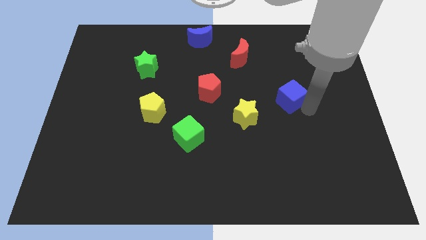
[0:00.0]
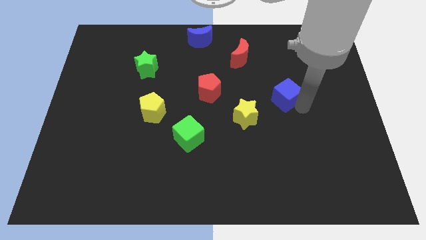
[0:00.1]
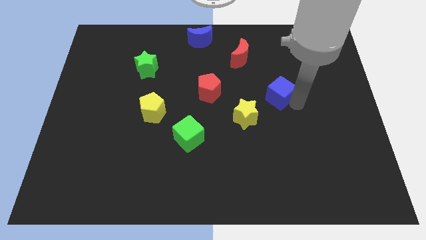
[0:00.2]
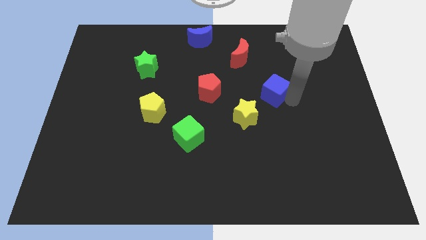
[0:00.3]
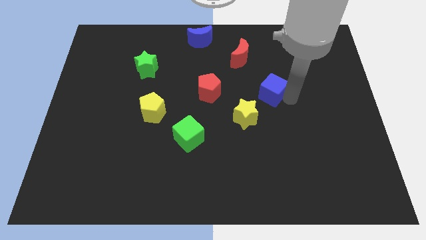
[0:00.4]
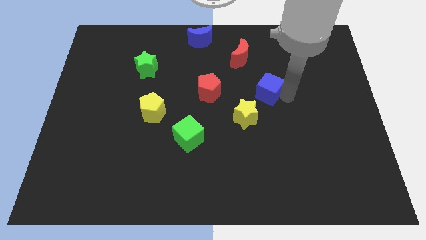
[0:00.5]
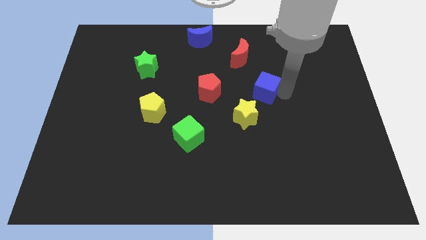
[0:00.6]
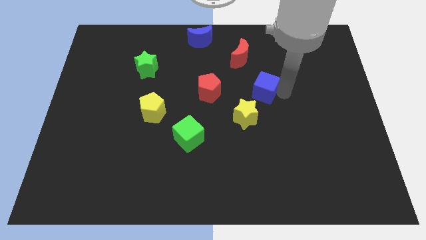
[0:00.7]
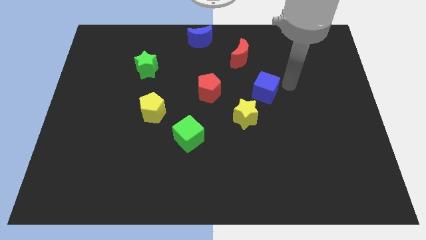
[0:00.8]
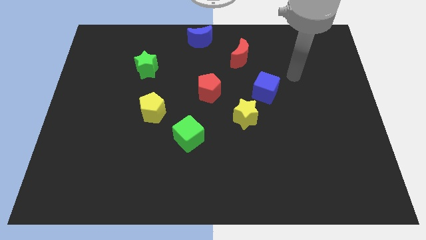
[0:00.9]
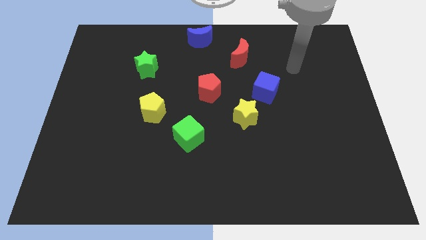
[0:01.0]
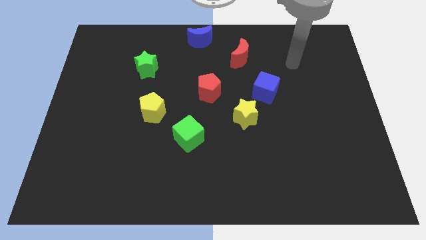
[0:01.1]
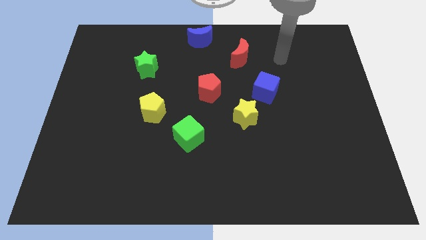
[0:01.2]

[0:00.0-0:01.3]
place the blue cube close to the yellow star

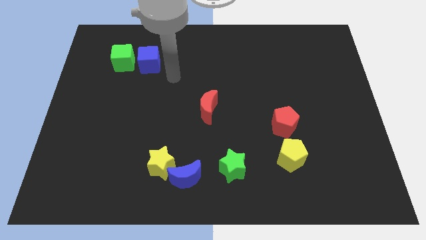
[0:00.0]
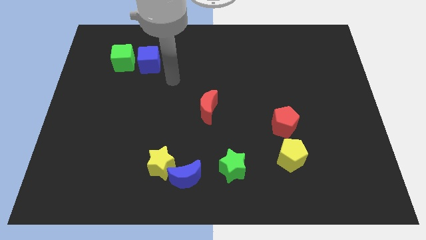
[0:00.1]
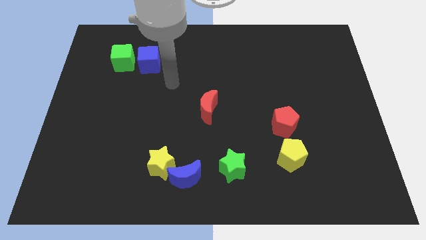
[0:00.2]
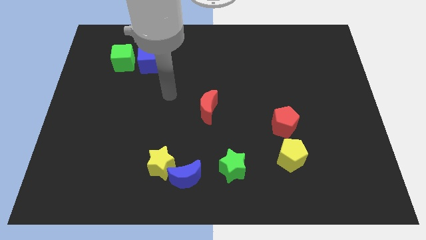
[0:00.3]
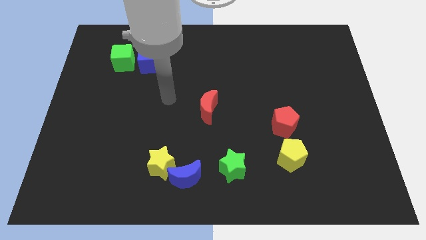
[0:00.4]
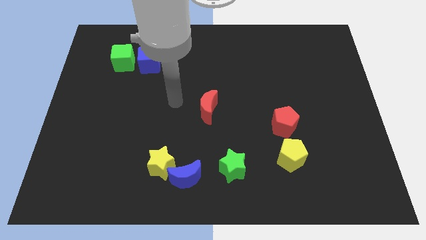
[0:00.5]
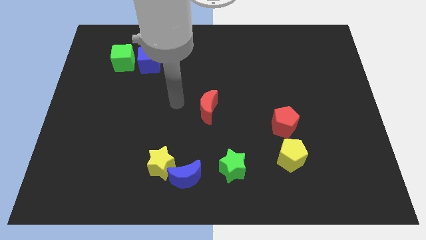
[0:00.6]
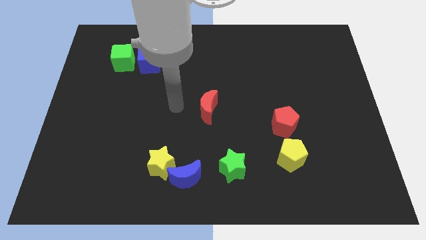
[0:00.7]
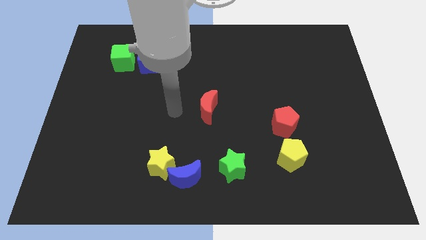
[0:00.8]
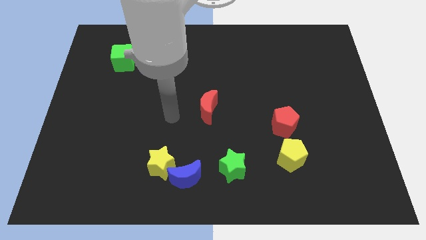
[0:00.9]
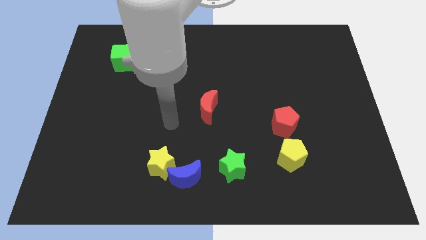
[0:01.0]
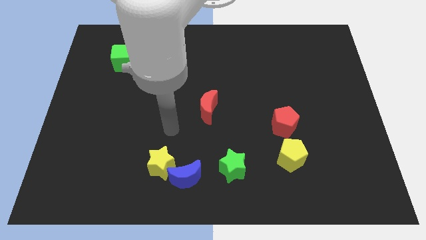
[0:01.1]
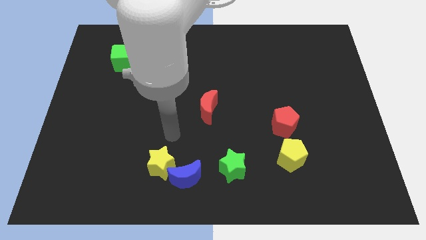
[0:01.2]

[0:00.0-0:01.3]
move your arm to the top of yellow star

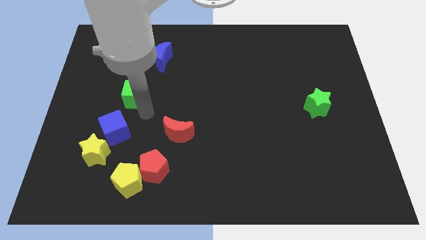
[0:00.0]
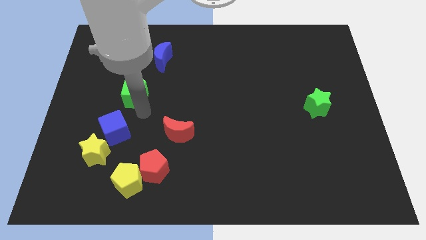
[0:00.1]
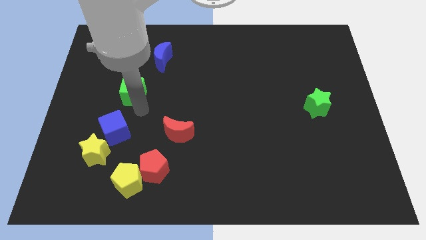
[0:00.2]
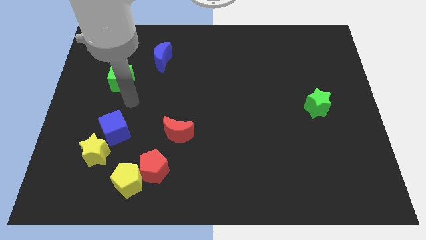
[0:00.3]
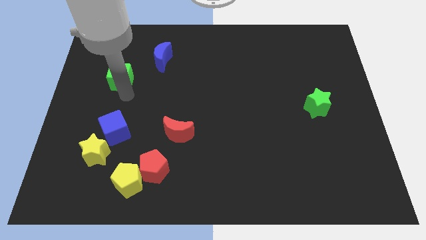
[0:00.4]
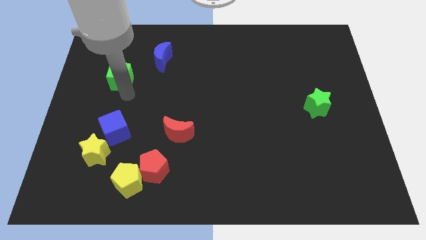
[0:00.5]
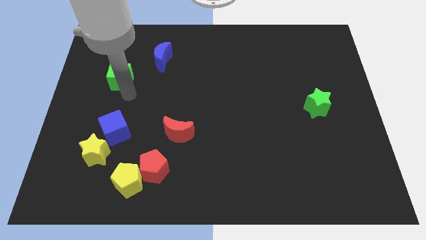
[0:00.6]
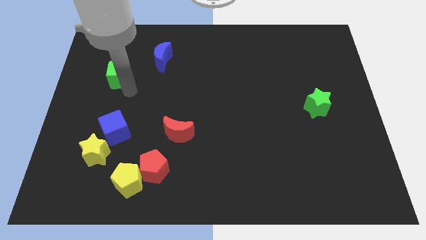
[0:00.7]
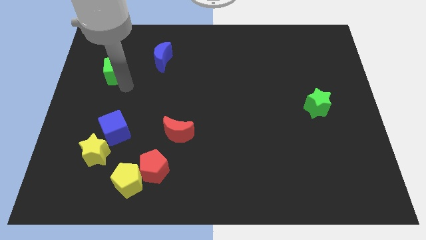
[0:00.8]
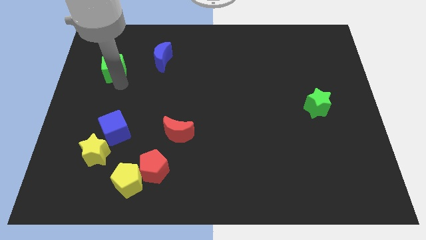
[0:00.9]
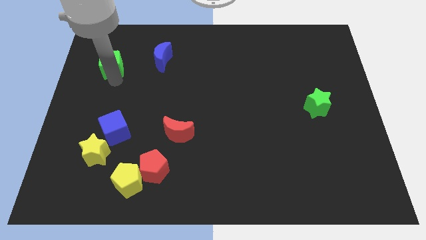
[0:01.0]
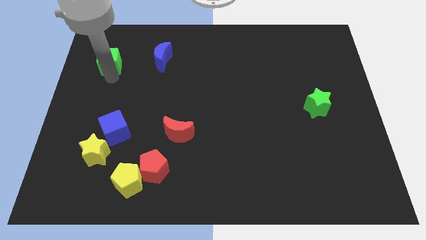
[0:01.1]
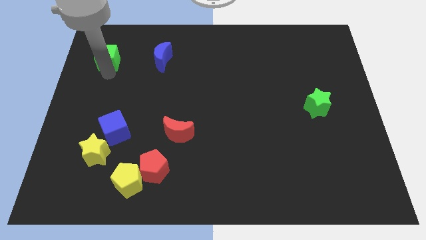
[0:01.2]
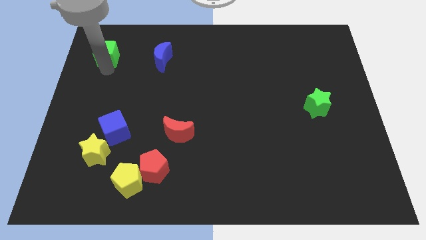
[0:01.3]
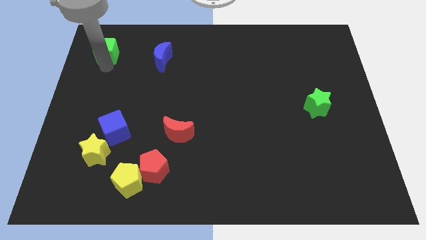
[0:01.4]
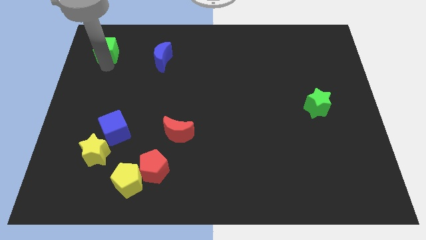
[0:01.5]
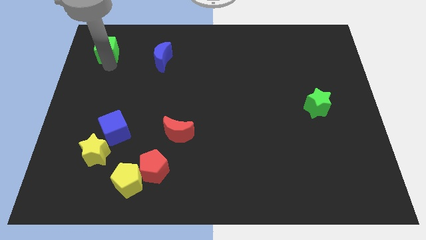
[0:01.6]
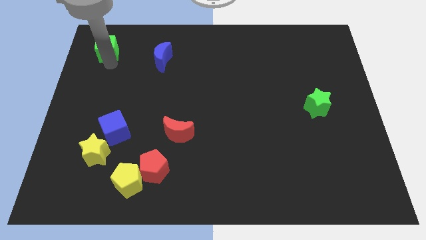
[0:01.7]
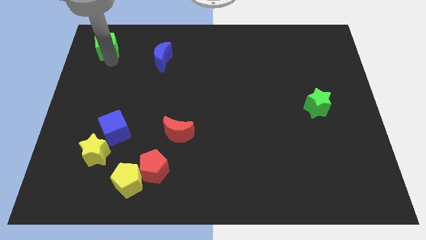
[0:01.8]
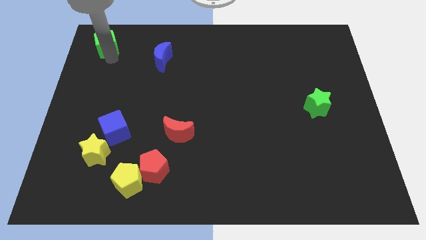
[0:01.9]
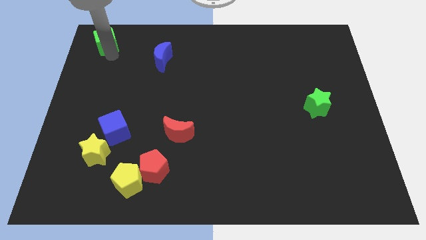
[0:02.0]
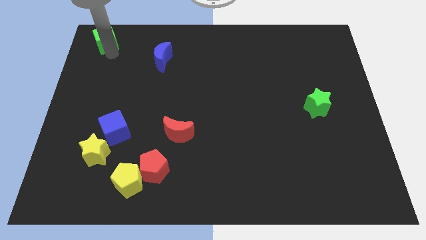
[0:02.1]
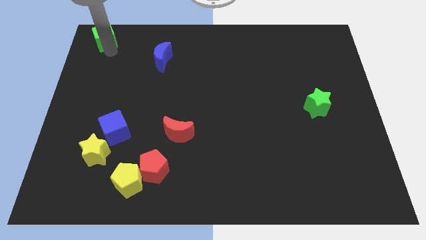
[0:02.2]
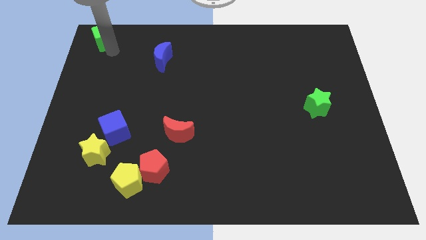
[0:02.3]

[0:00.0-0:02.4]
place the green cube at top left side of the board

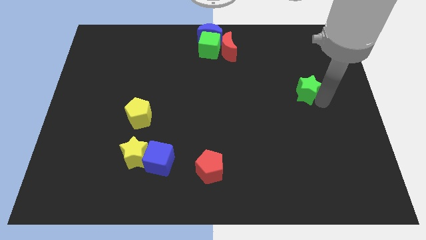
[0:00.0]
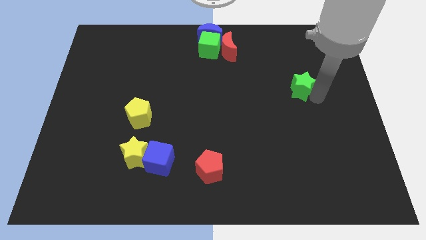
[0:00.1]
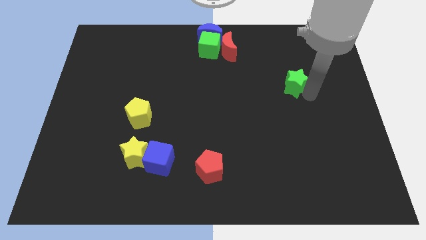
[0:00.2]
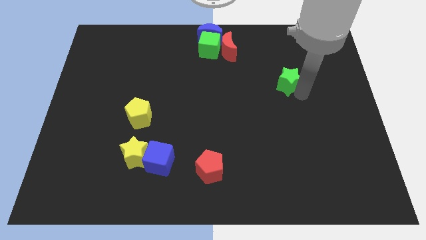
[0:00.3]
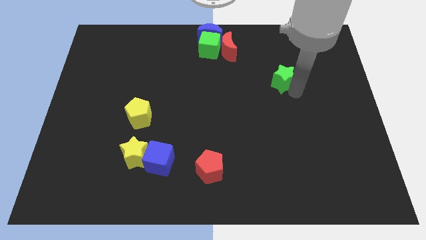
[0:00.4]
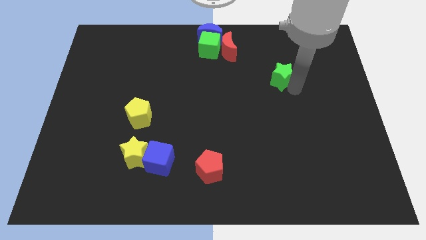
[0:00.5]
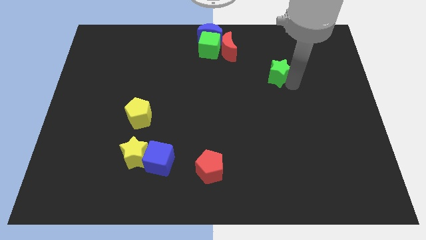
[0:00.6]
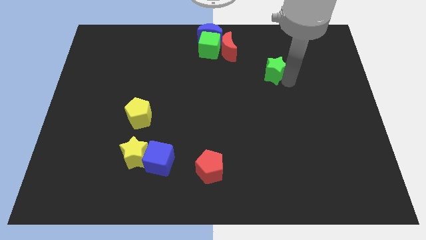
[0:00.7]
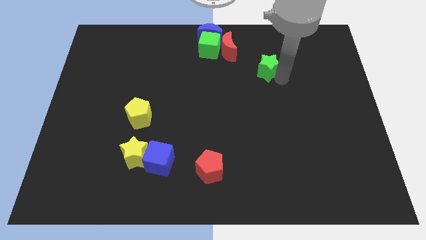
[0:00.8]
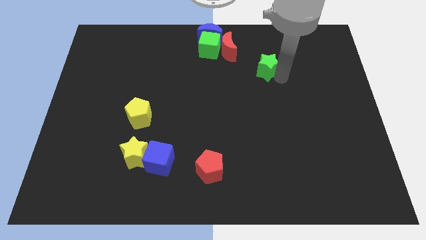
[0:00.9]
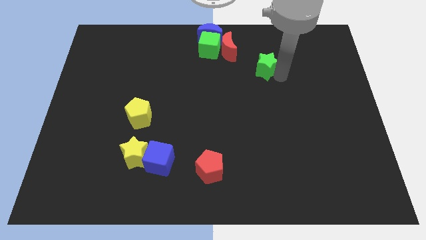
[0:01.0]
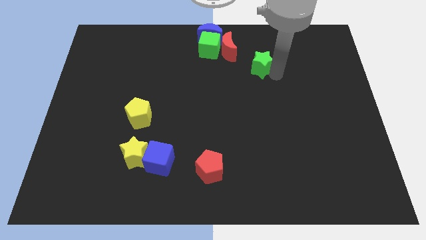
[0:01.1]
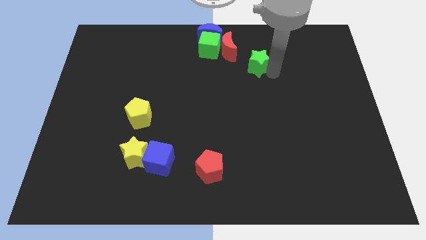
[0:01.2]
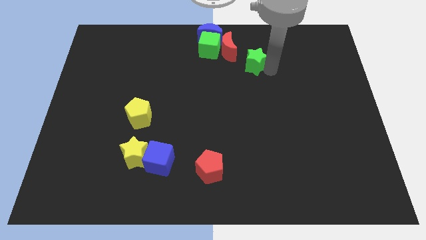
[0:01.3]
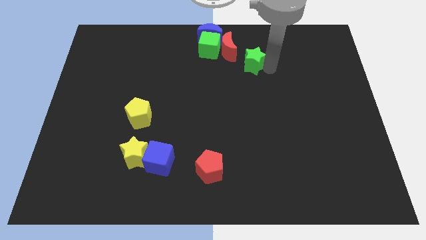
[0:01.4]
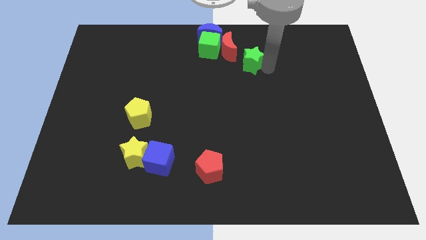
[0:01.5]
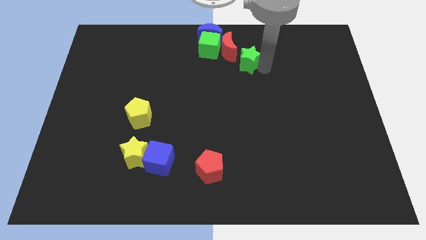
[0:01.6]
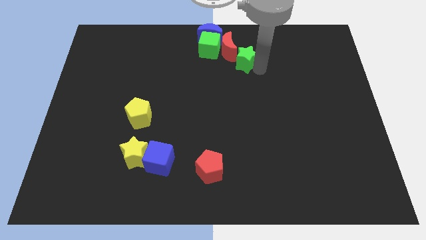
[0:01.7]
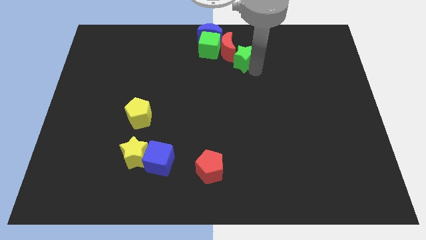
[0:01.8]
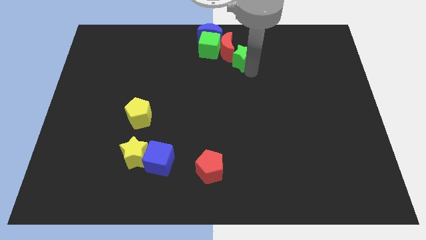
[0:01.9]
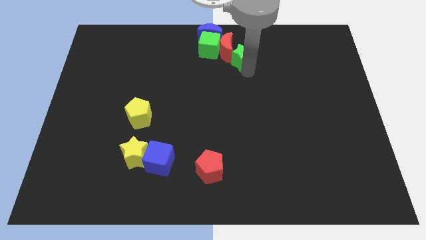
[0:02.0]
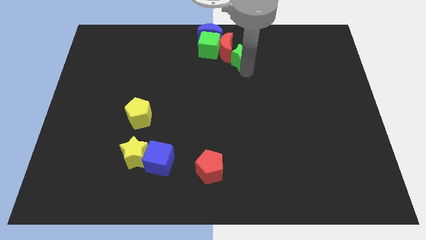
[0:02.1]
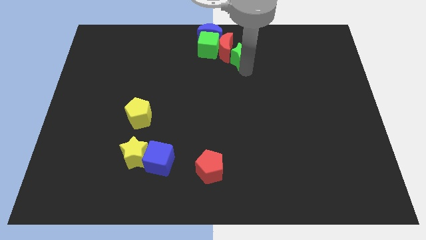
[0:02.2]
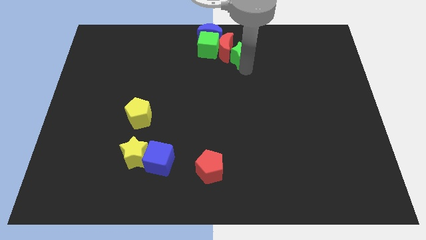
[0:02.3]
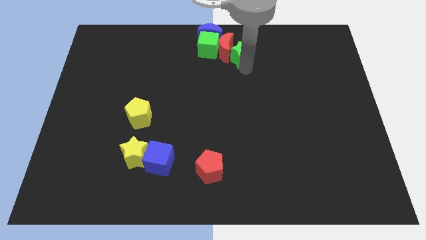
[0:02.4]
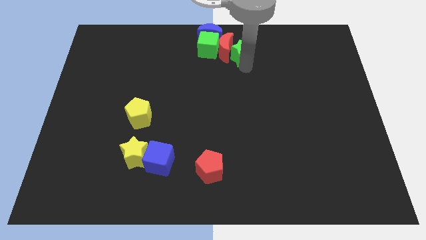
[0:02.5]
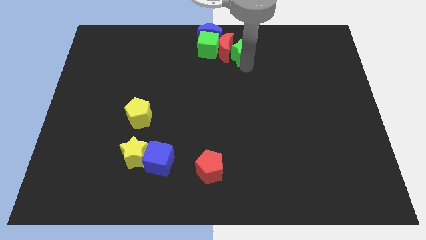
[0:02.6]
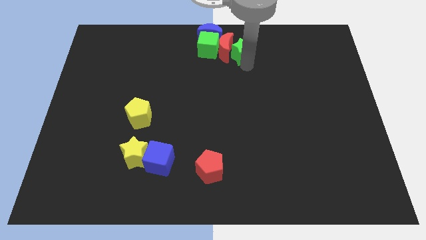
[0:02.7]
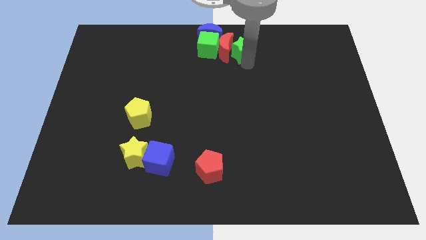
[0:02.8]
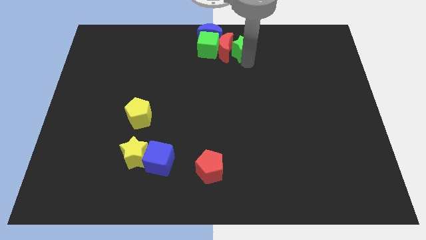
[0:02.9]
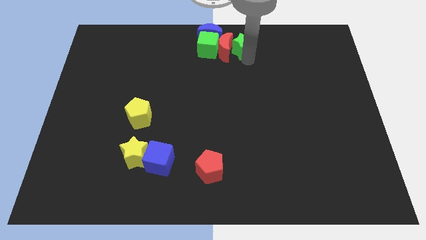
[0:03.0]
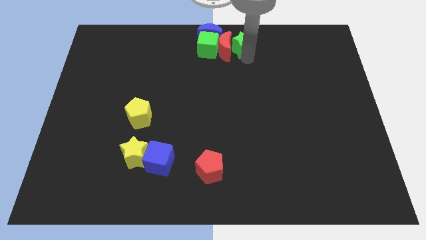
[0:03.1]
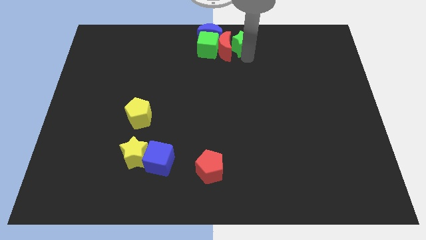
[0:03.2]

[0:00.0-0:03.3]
slide the green star into the right side of the red crescent

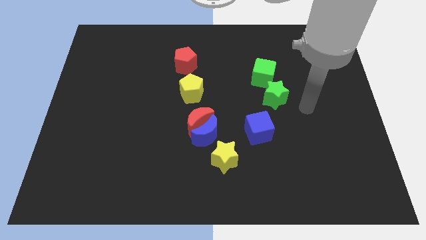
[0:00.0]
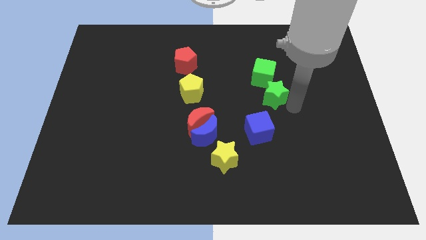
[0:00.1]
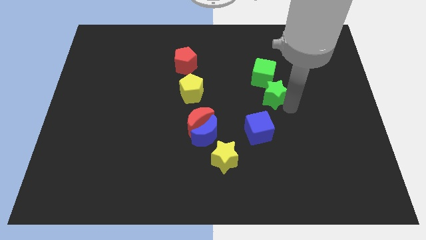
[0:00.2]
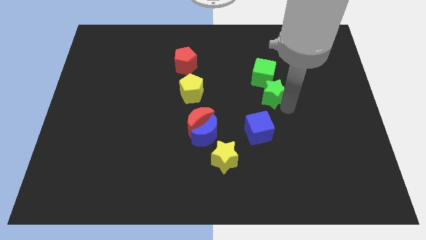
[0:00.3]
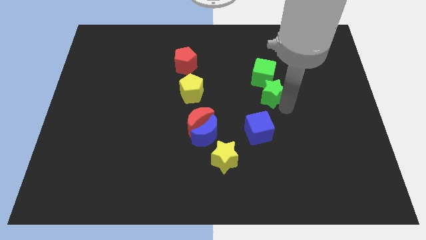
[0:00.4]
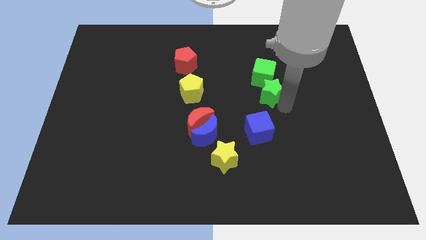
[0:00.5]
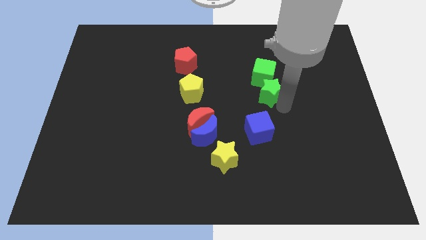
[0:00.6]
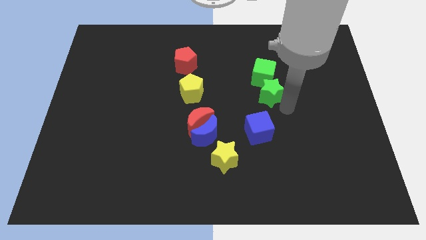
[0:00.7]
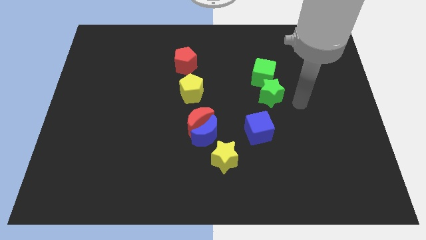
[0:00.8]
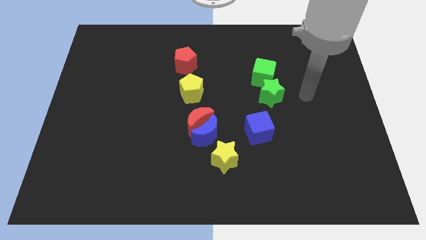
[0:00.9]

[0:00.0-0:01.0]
place the green star above the blue cube
